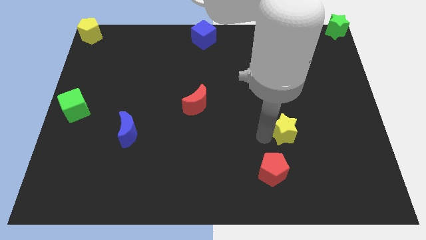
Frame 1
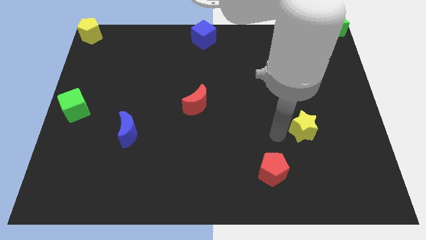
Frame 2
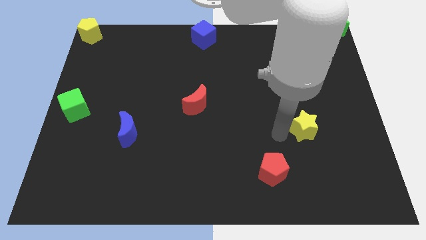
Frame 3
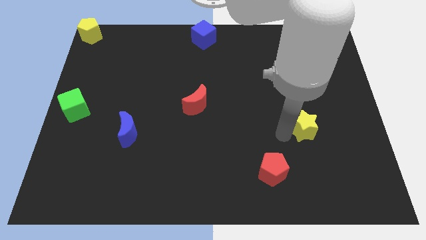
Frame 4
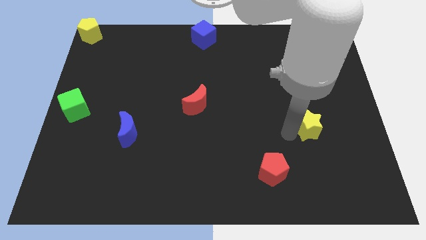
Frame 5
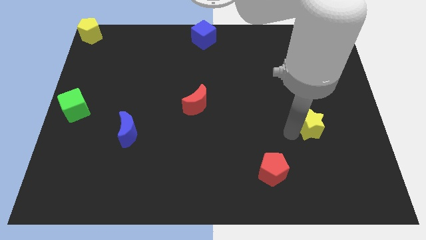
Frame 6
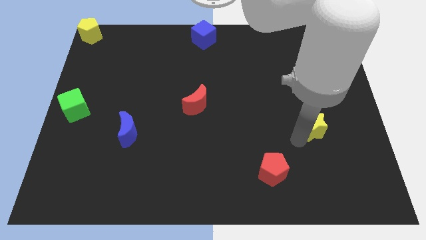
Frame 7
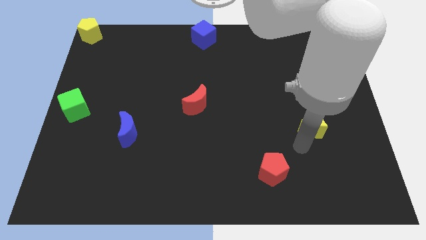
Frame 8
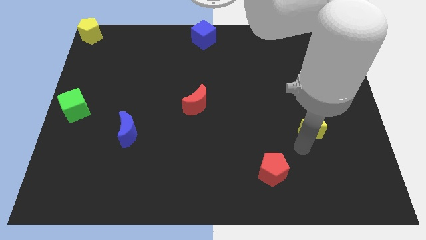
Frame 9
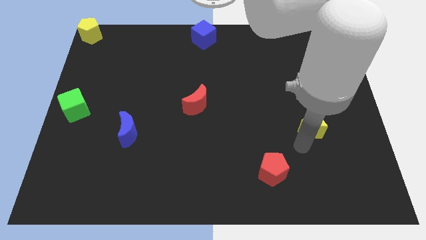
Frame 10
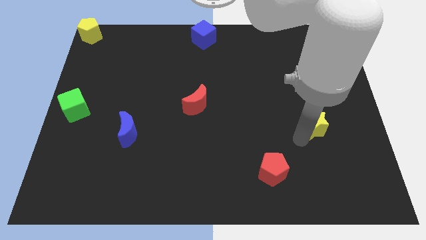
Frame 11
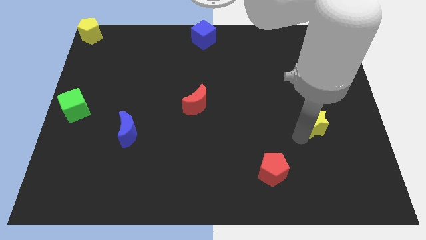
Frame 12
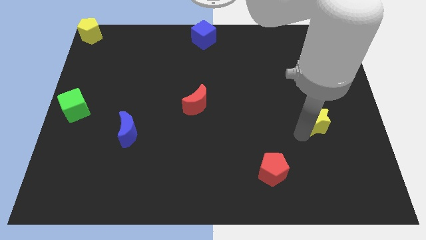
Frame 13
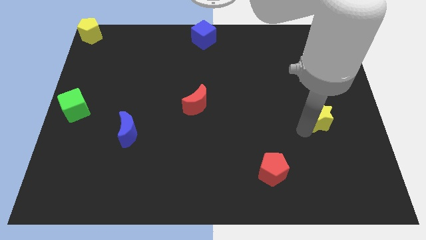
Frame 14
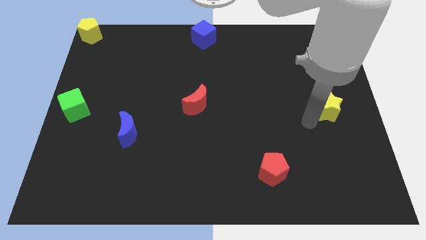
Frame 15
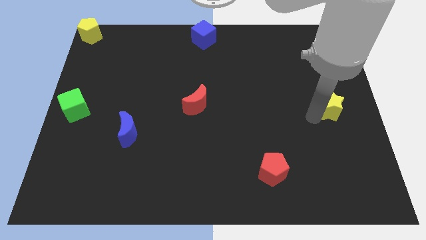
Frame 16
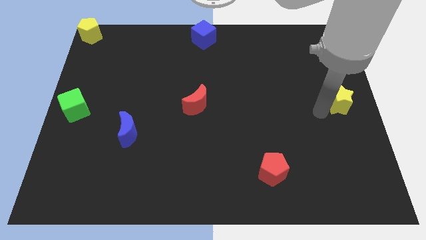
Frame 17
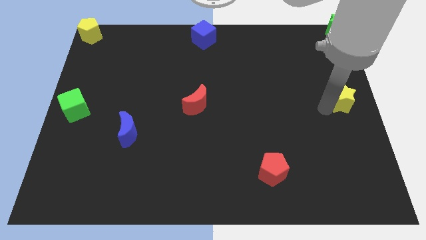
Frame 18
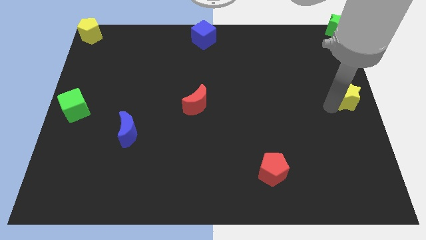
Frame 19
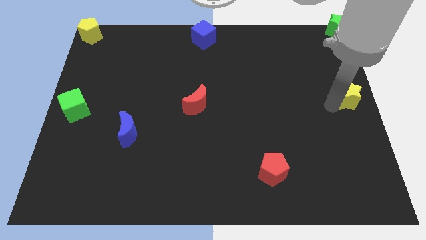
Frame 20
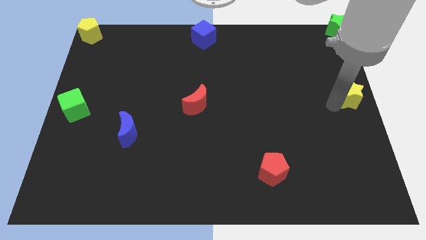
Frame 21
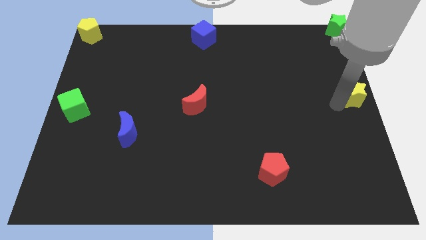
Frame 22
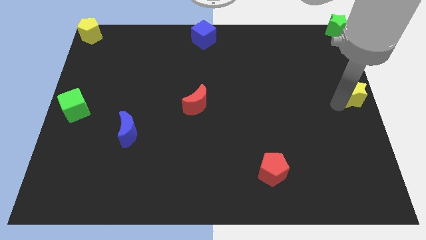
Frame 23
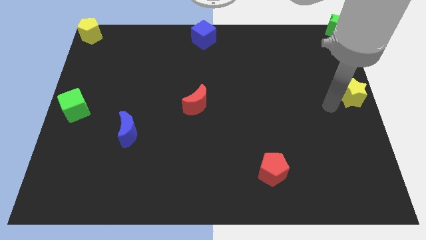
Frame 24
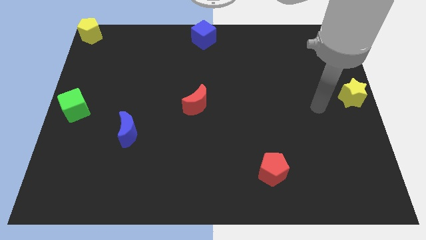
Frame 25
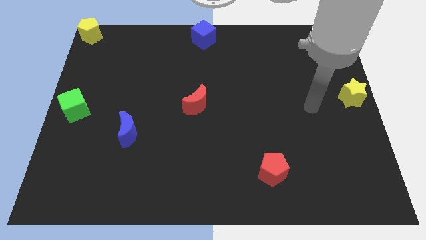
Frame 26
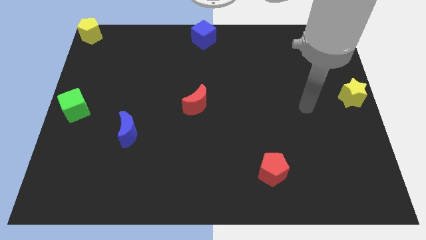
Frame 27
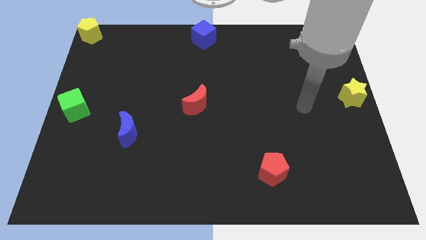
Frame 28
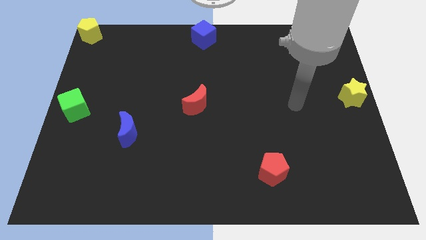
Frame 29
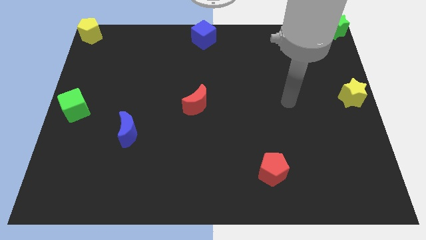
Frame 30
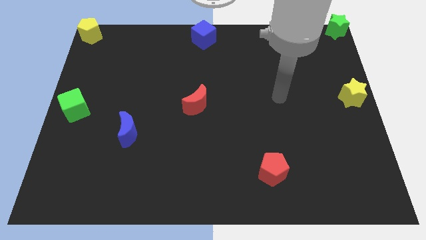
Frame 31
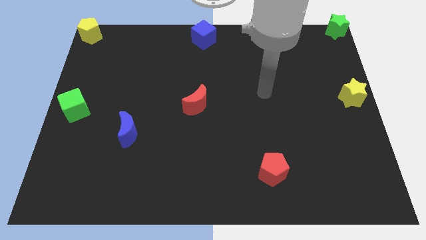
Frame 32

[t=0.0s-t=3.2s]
put the yellow star vertically below the green star

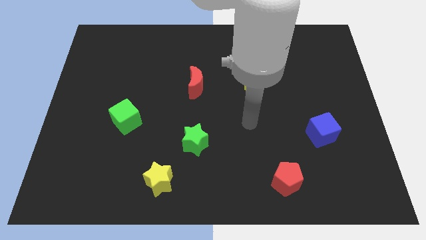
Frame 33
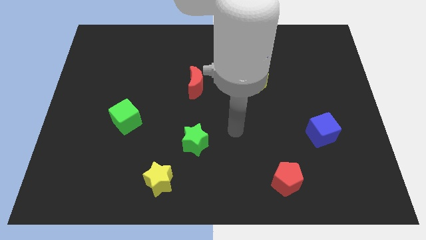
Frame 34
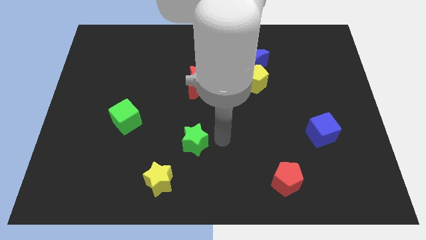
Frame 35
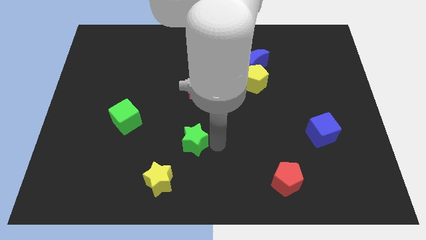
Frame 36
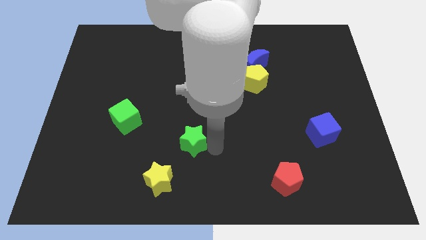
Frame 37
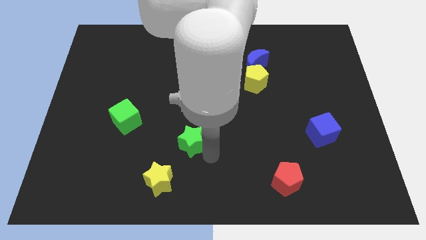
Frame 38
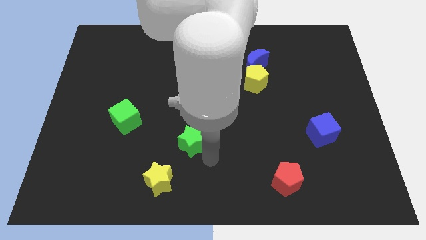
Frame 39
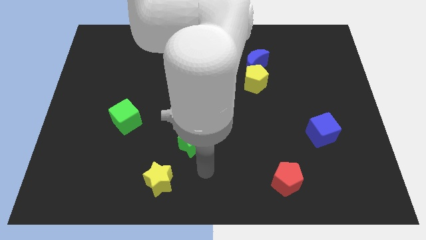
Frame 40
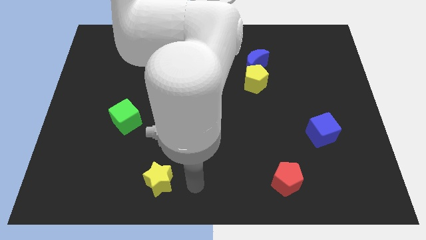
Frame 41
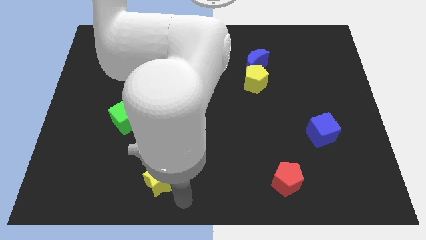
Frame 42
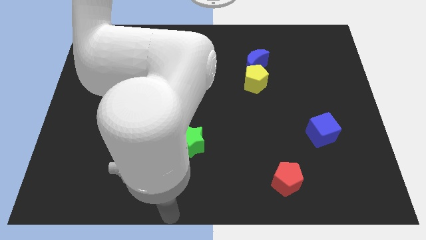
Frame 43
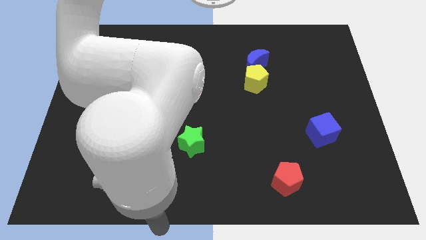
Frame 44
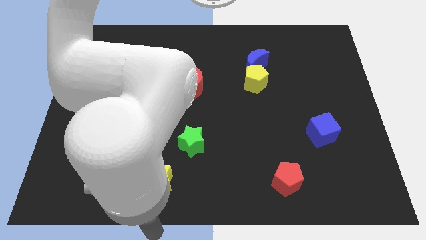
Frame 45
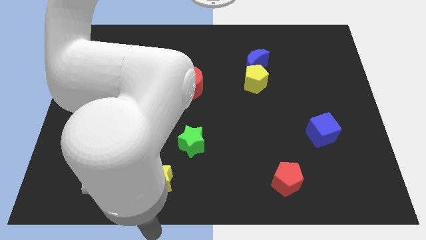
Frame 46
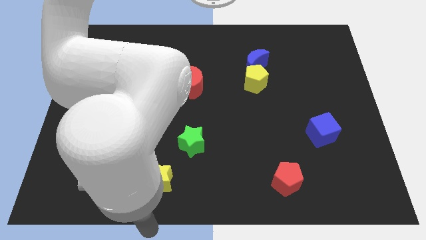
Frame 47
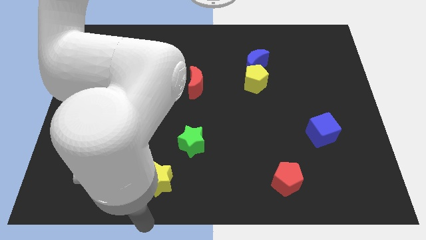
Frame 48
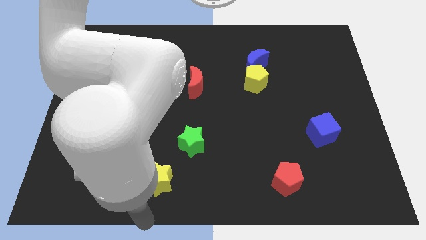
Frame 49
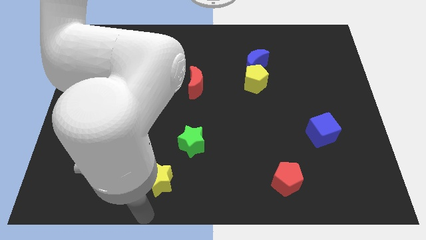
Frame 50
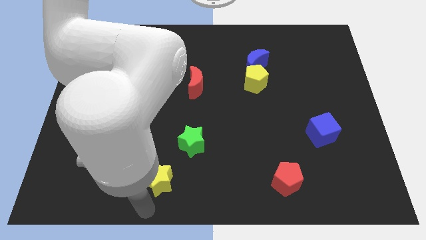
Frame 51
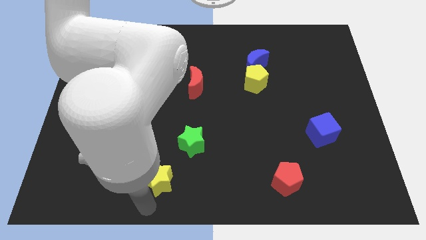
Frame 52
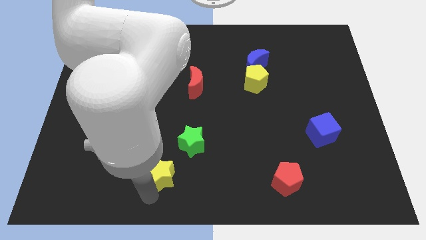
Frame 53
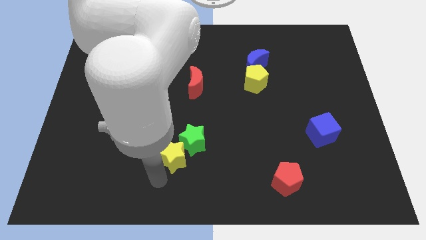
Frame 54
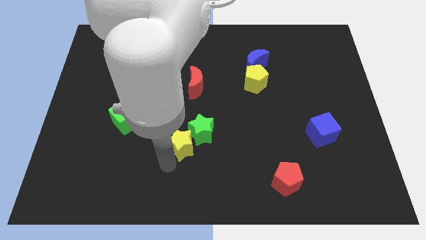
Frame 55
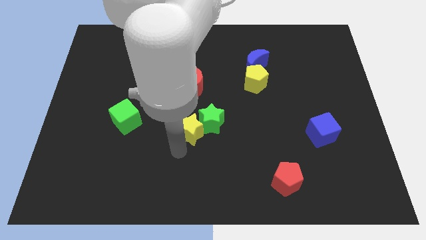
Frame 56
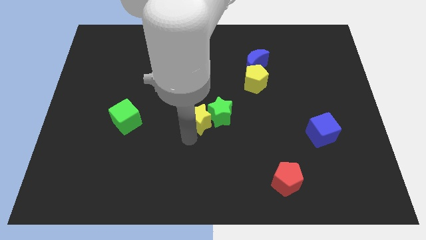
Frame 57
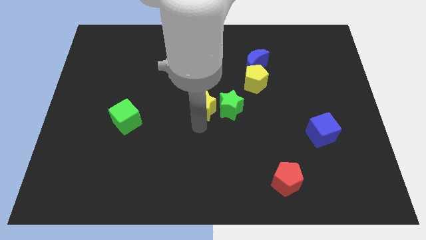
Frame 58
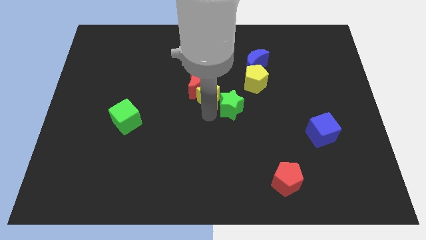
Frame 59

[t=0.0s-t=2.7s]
move yellow and green star to the center of the board

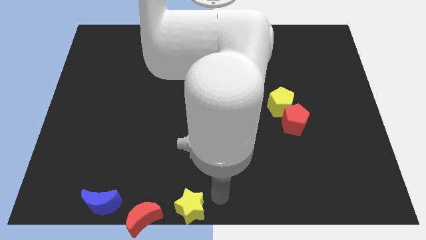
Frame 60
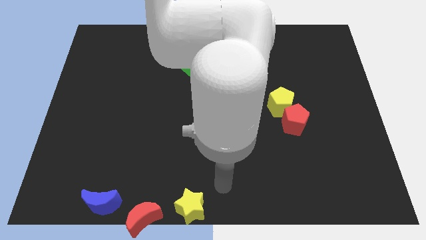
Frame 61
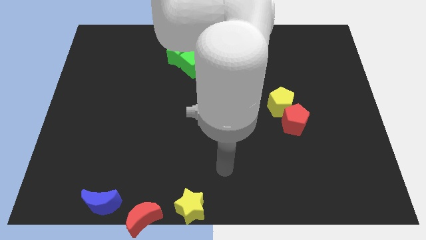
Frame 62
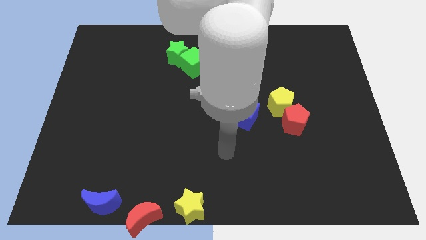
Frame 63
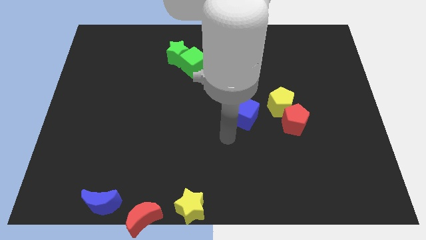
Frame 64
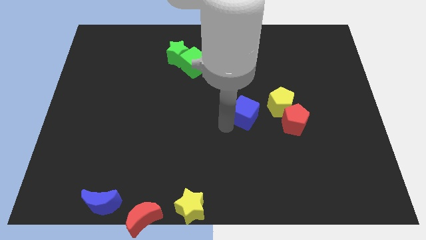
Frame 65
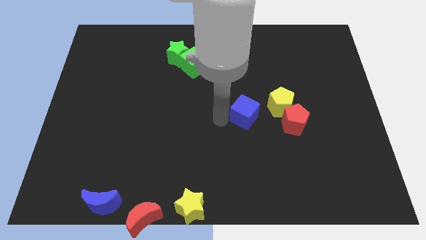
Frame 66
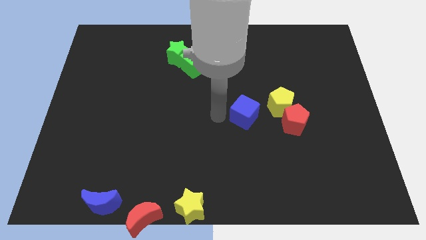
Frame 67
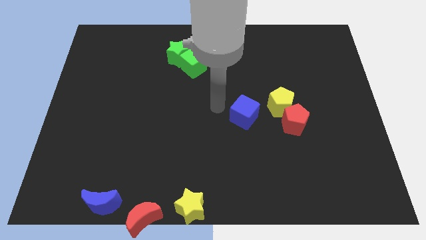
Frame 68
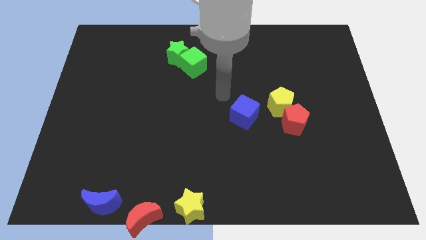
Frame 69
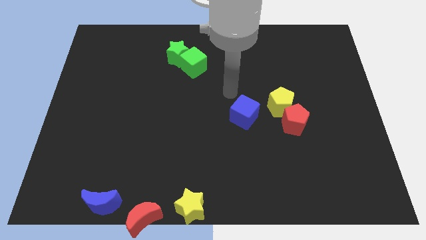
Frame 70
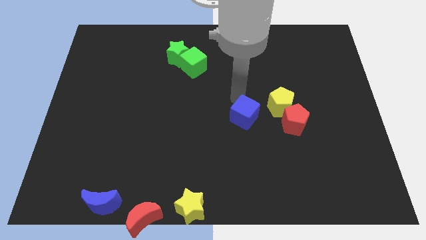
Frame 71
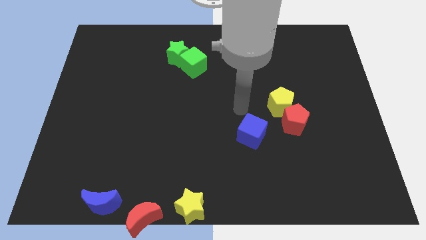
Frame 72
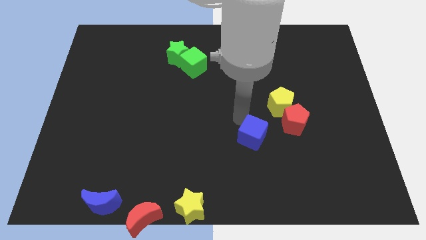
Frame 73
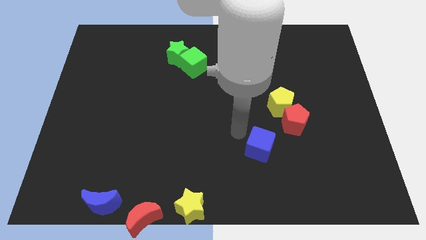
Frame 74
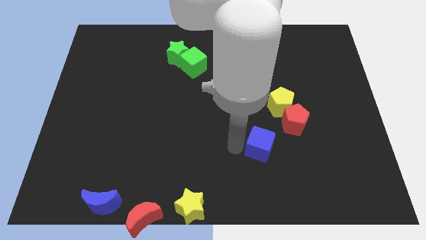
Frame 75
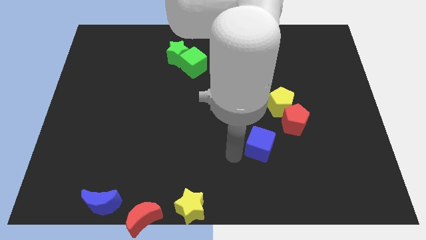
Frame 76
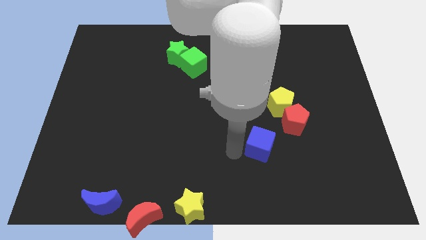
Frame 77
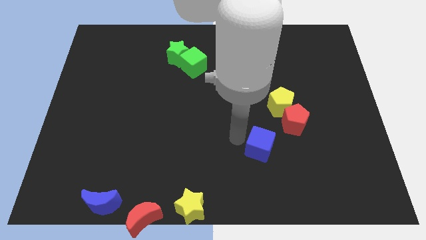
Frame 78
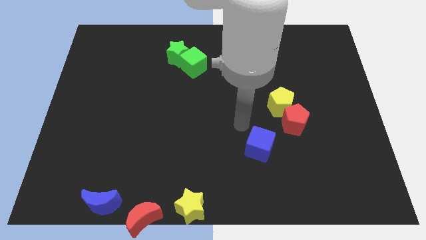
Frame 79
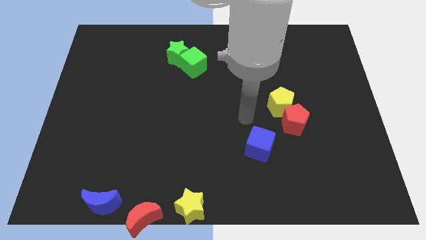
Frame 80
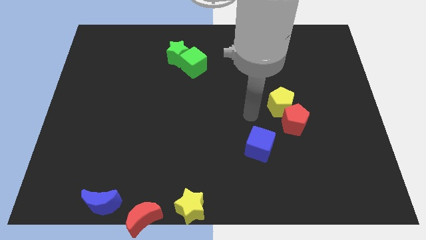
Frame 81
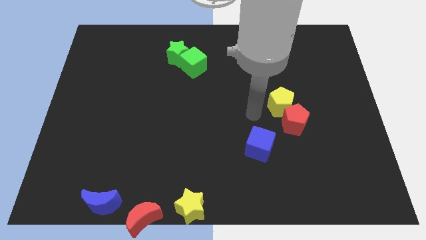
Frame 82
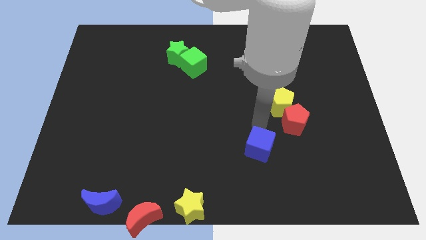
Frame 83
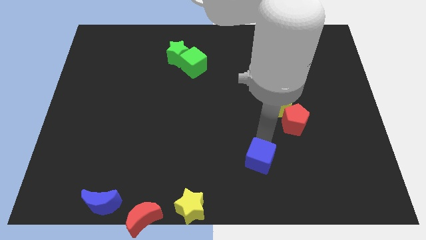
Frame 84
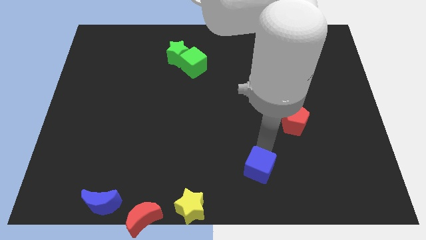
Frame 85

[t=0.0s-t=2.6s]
move the blue cube to the bottom left of the red pentagon

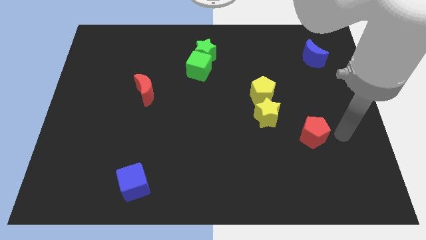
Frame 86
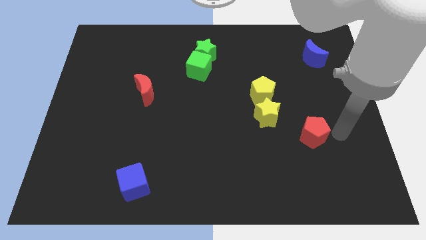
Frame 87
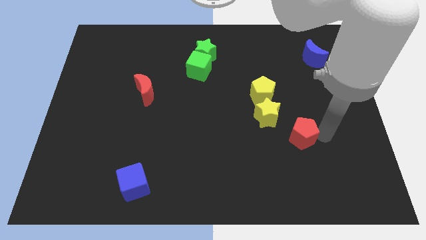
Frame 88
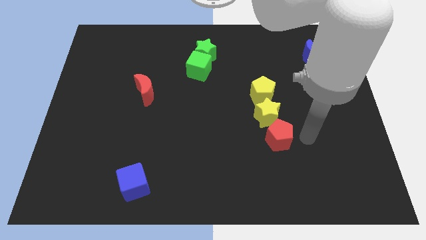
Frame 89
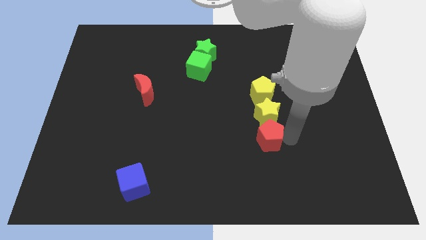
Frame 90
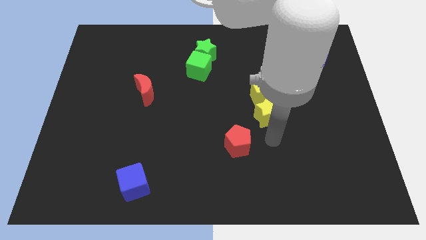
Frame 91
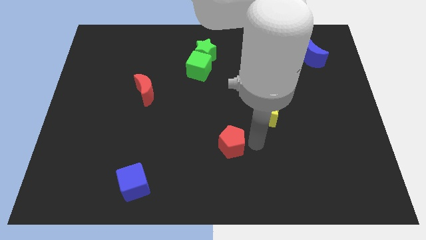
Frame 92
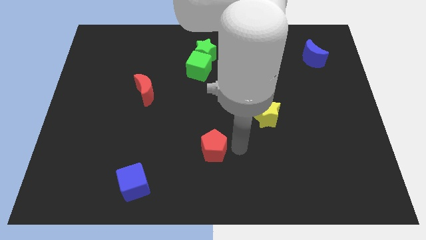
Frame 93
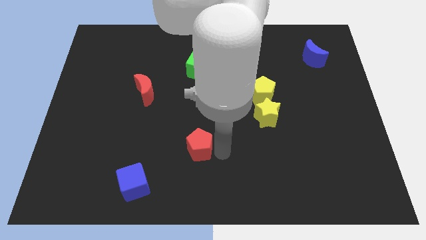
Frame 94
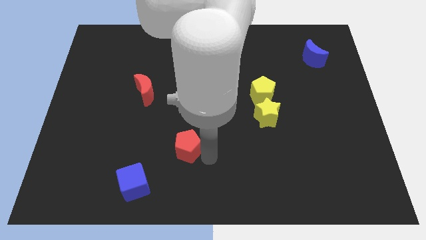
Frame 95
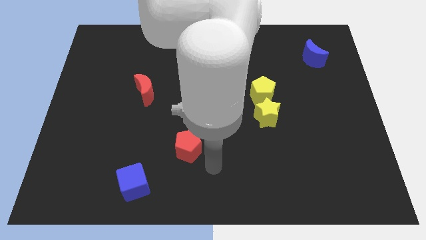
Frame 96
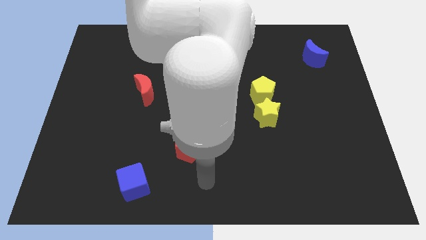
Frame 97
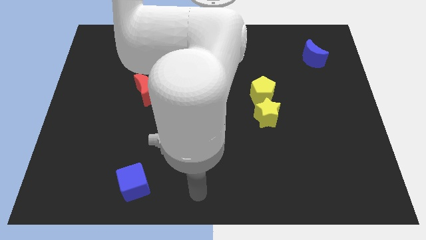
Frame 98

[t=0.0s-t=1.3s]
place the red pentagon diagonal to the red moon
